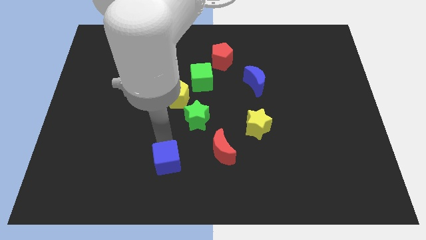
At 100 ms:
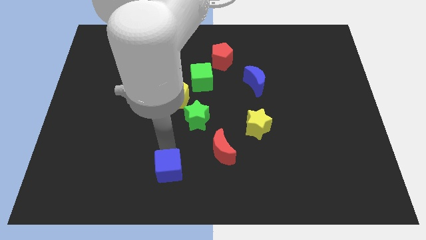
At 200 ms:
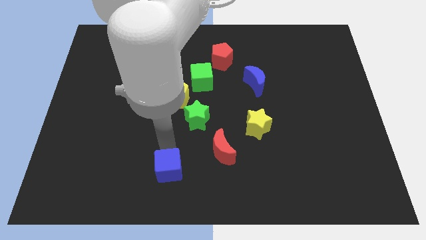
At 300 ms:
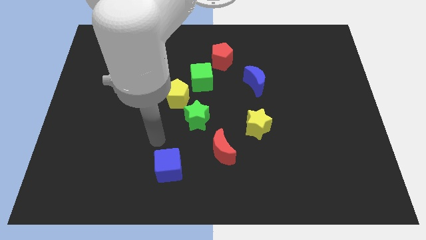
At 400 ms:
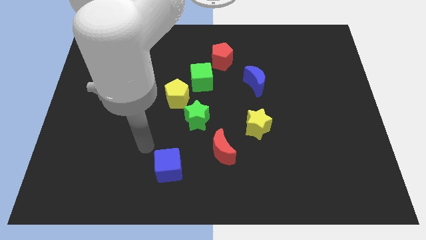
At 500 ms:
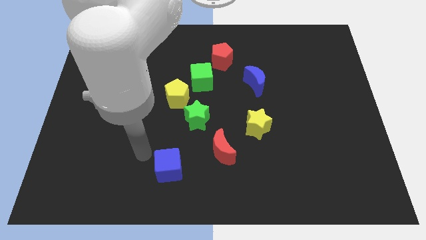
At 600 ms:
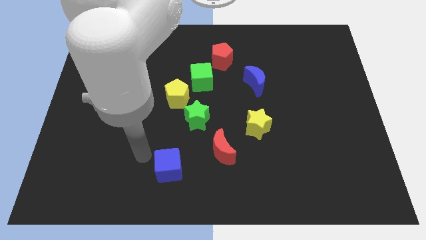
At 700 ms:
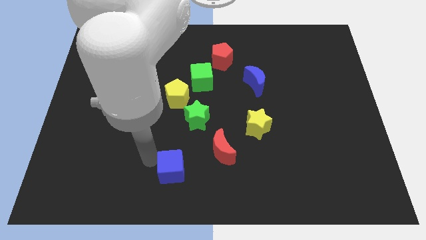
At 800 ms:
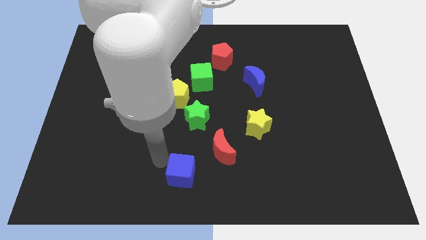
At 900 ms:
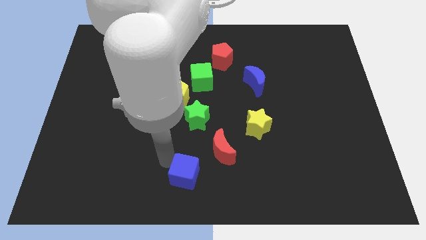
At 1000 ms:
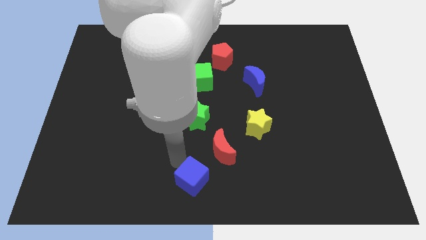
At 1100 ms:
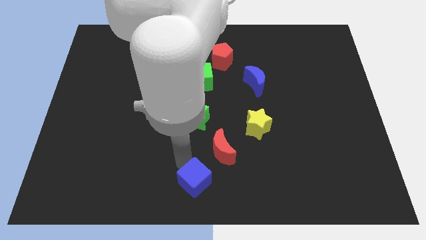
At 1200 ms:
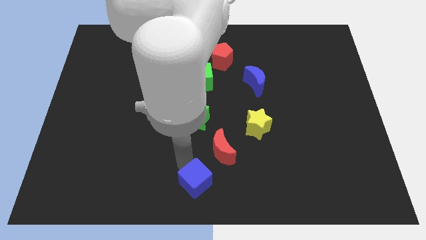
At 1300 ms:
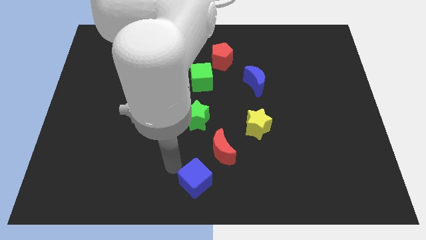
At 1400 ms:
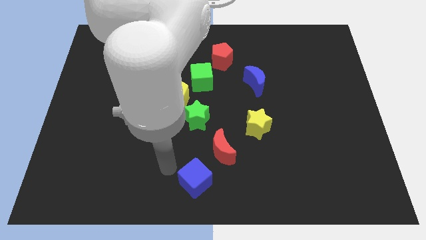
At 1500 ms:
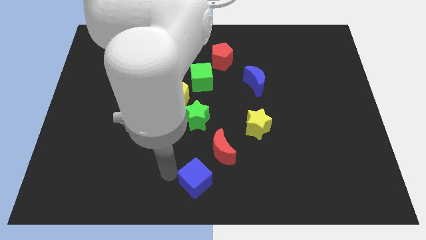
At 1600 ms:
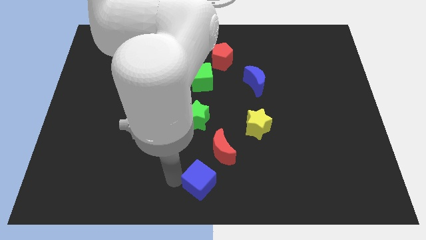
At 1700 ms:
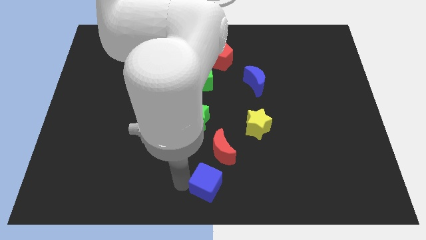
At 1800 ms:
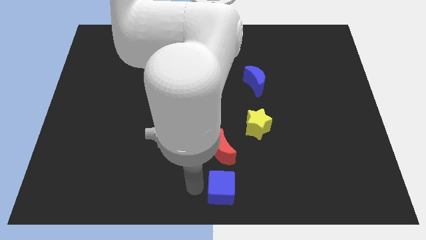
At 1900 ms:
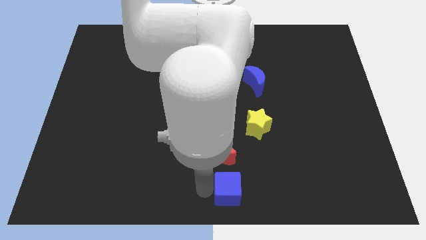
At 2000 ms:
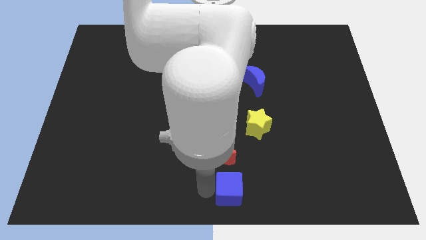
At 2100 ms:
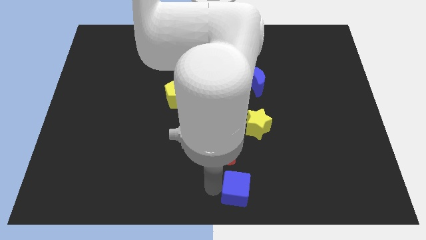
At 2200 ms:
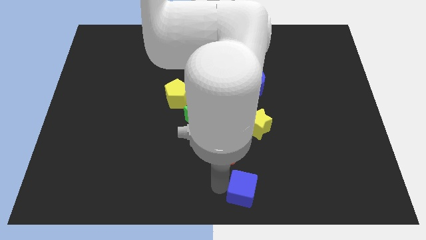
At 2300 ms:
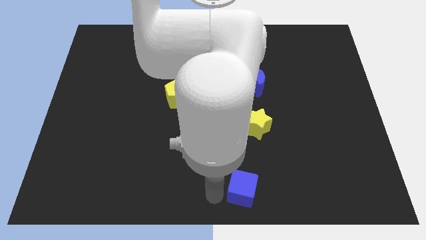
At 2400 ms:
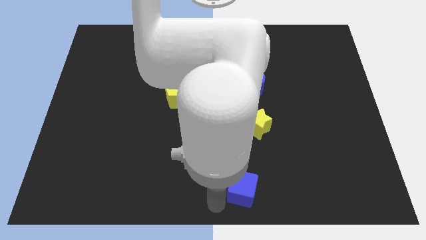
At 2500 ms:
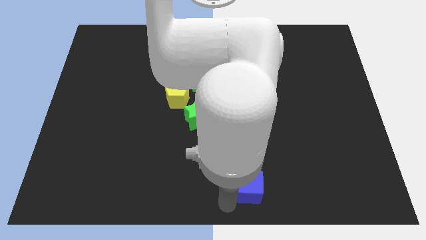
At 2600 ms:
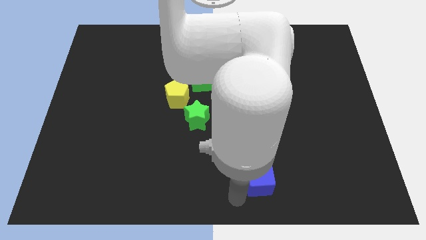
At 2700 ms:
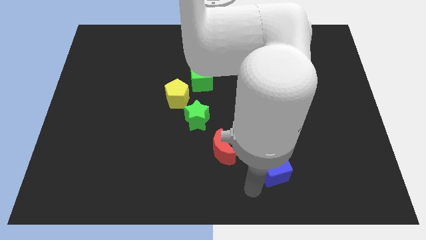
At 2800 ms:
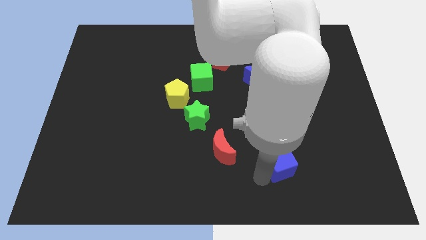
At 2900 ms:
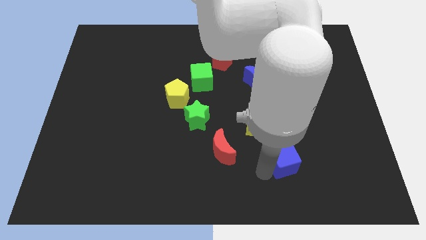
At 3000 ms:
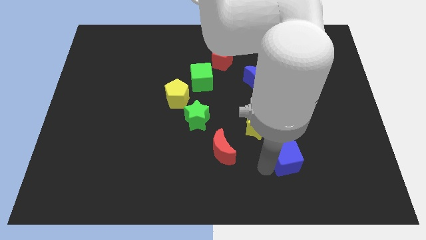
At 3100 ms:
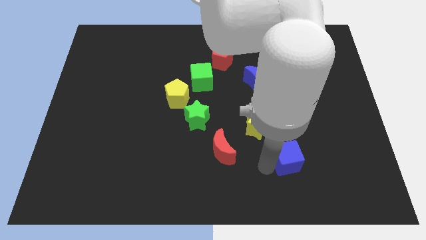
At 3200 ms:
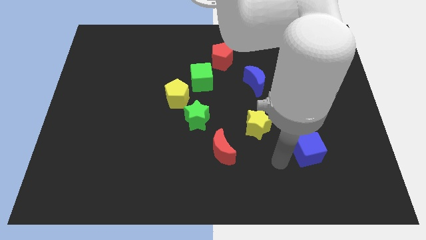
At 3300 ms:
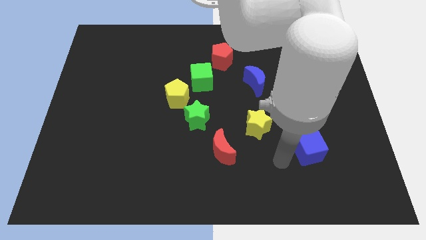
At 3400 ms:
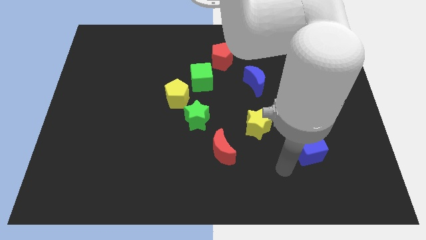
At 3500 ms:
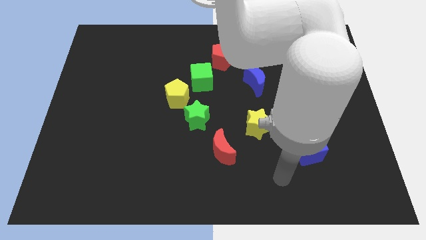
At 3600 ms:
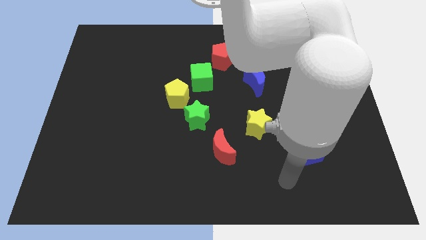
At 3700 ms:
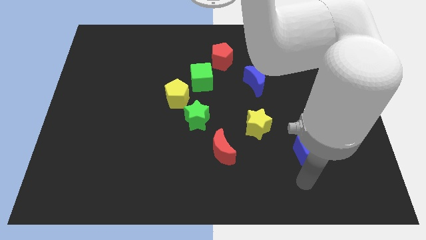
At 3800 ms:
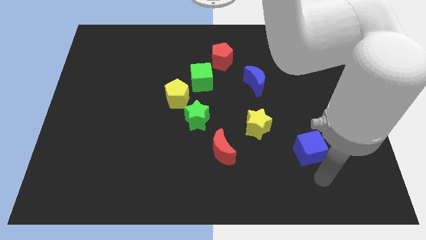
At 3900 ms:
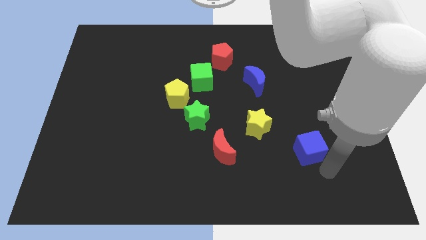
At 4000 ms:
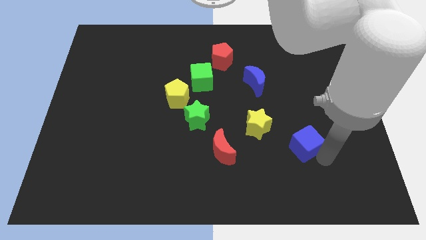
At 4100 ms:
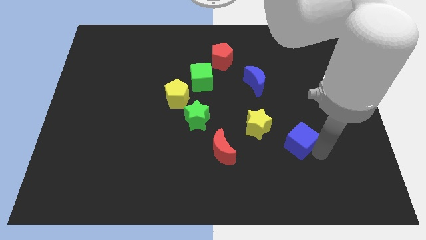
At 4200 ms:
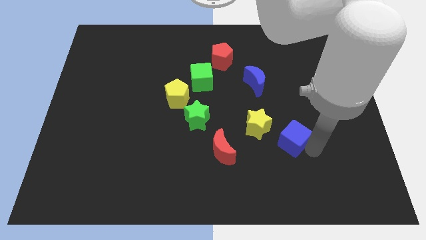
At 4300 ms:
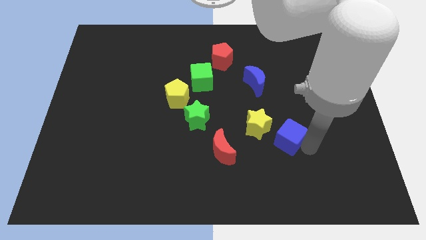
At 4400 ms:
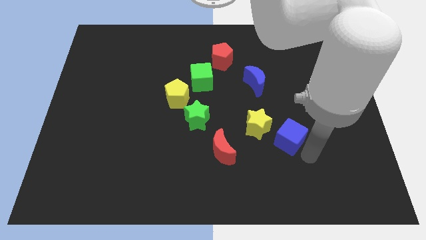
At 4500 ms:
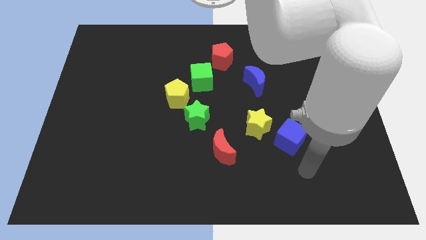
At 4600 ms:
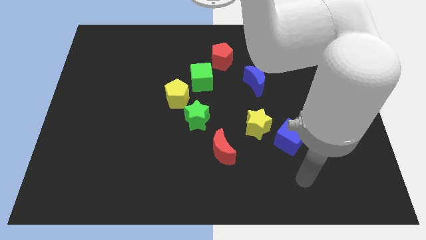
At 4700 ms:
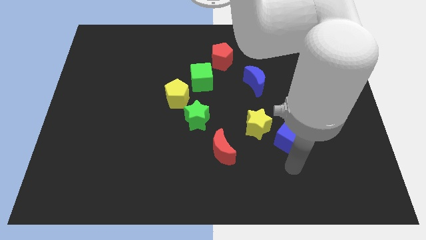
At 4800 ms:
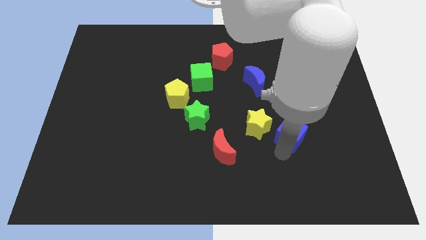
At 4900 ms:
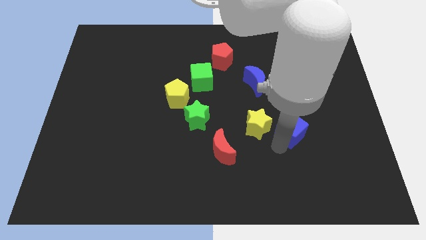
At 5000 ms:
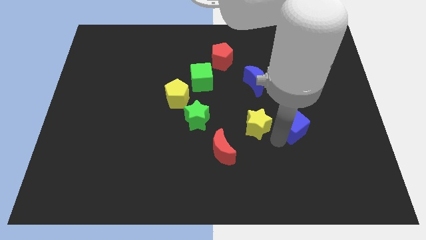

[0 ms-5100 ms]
push blue cube to the right of yellow star

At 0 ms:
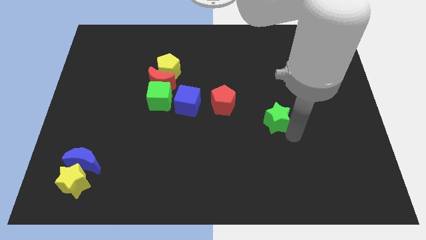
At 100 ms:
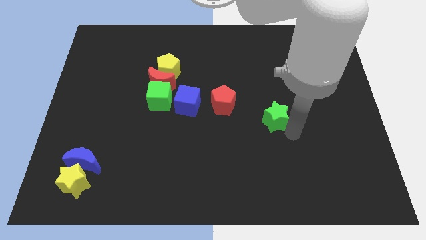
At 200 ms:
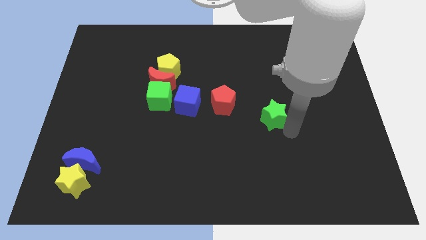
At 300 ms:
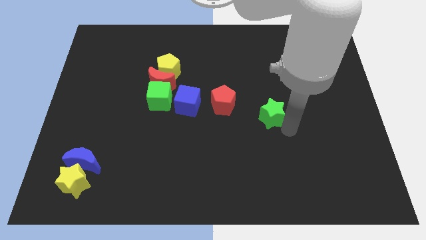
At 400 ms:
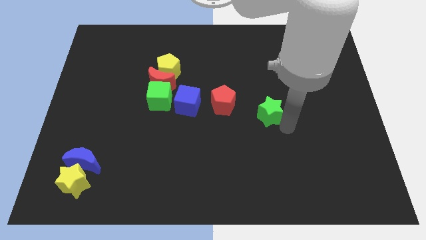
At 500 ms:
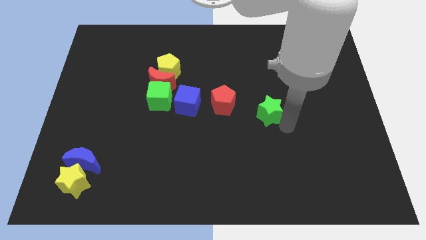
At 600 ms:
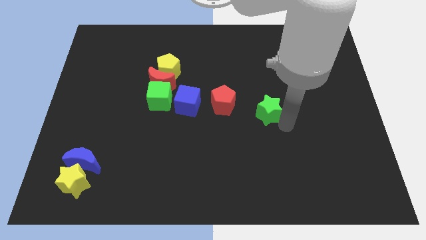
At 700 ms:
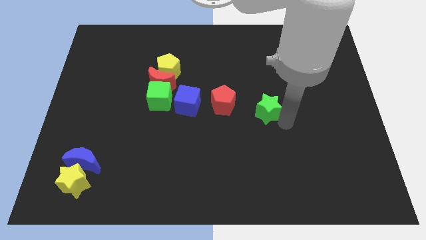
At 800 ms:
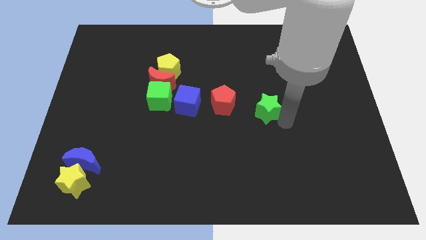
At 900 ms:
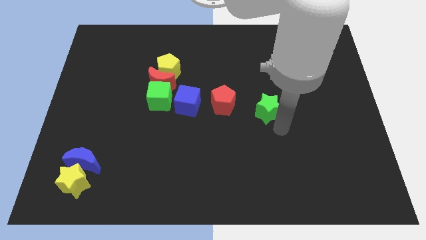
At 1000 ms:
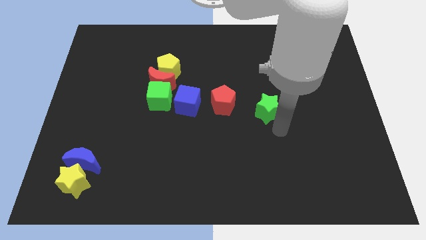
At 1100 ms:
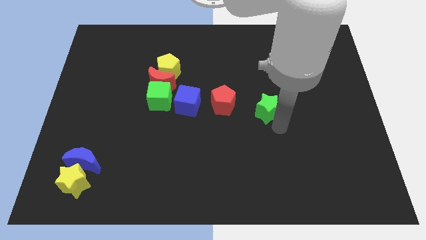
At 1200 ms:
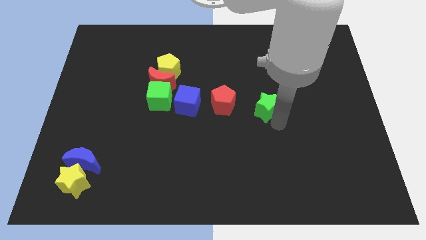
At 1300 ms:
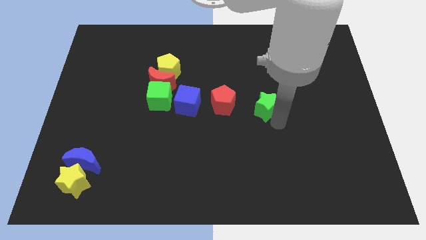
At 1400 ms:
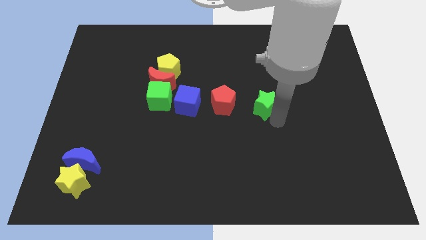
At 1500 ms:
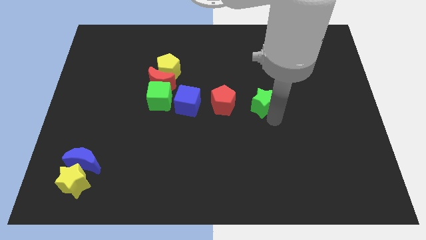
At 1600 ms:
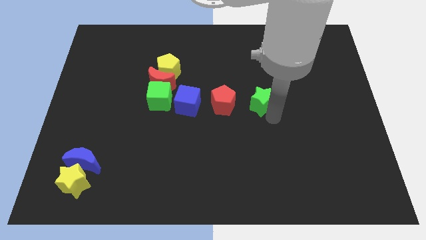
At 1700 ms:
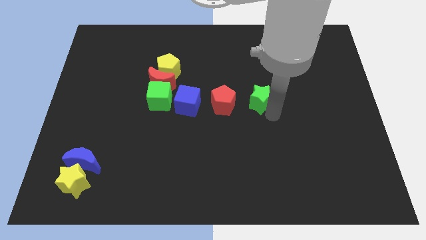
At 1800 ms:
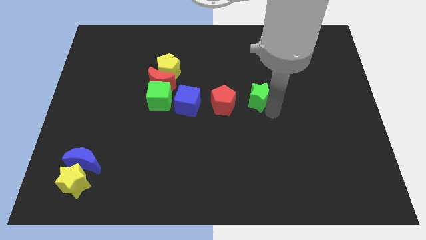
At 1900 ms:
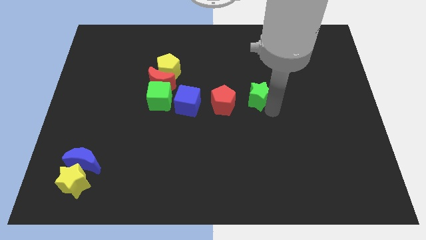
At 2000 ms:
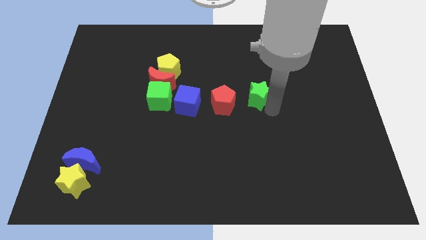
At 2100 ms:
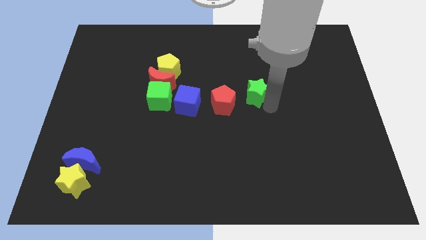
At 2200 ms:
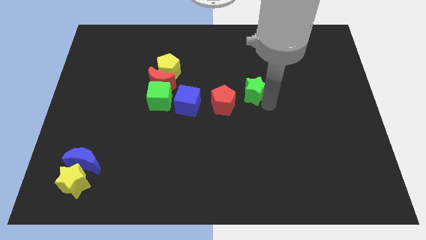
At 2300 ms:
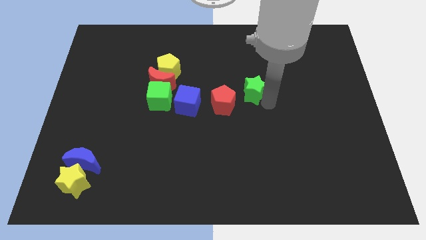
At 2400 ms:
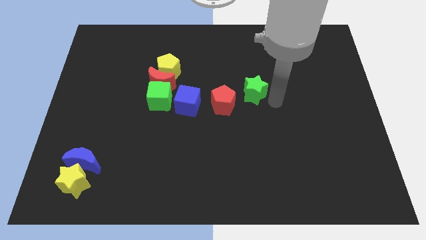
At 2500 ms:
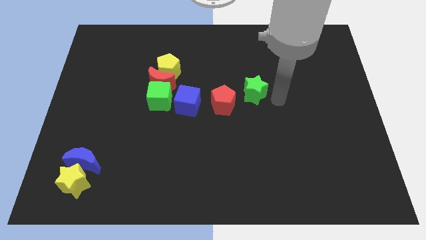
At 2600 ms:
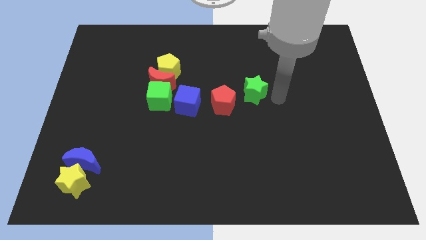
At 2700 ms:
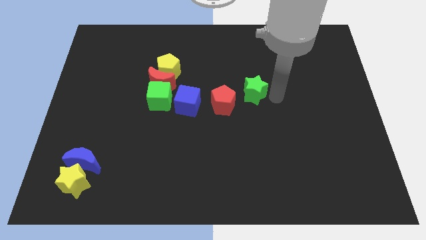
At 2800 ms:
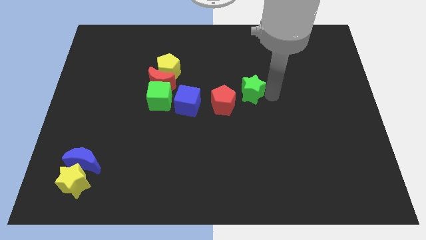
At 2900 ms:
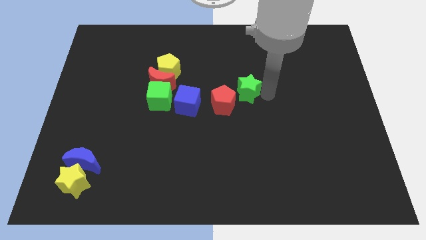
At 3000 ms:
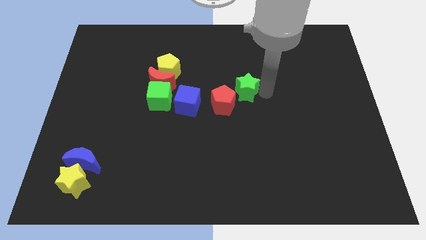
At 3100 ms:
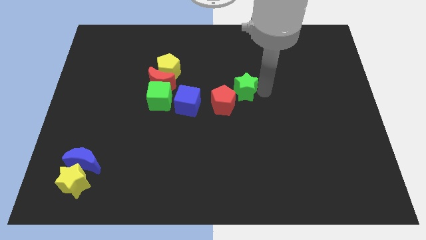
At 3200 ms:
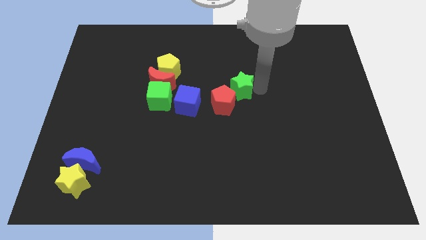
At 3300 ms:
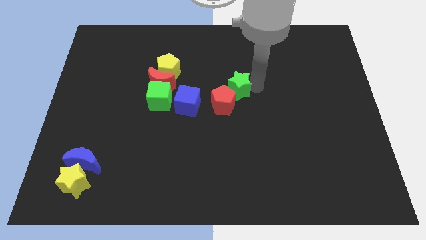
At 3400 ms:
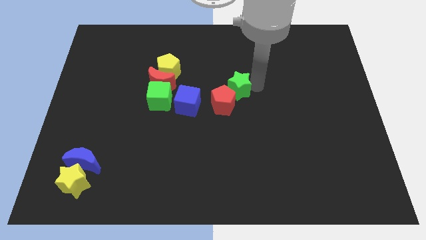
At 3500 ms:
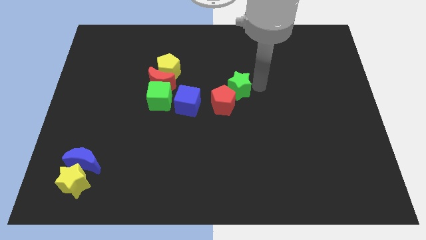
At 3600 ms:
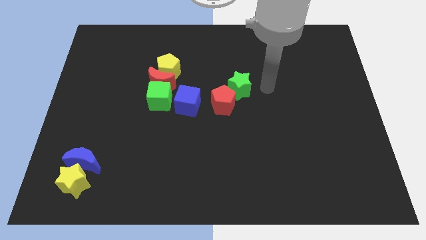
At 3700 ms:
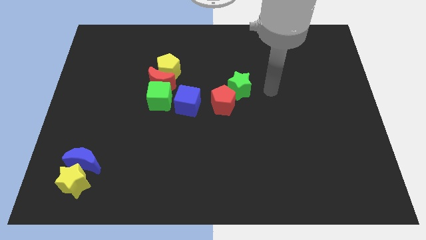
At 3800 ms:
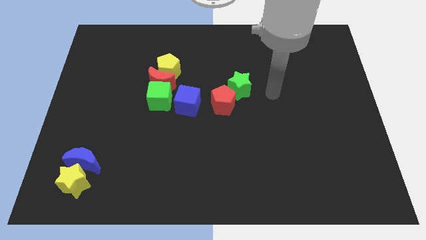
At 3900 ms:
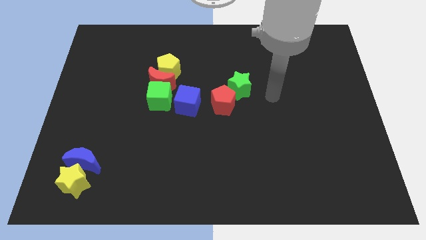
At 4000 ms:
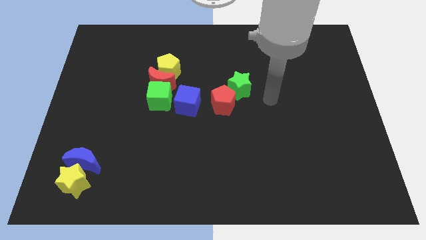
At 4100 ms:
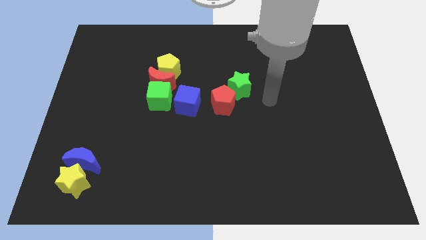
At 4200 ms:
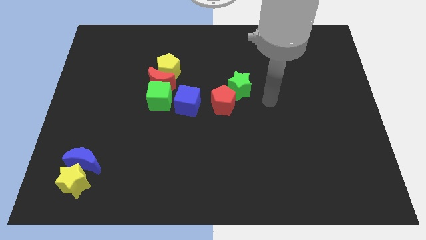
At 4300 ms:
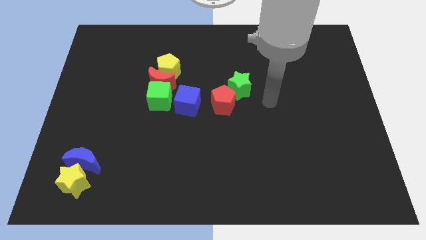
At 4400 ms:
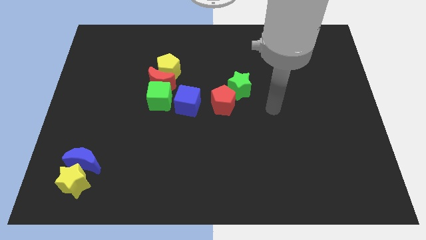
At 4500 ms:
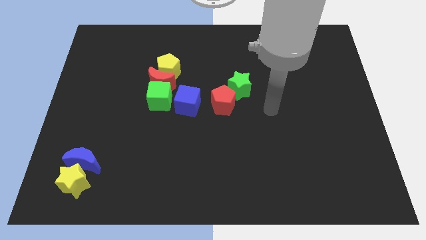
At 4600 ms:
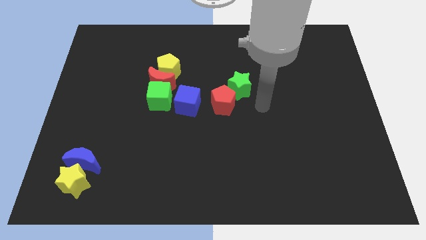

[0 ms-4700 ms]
place the green star at the top right side of the red pentagon
